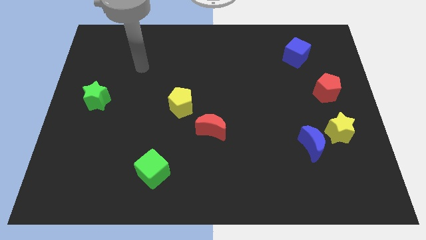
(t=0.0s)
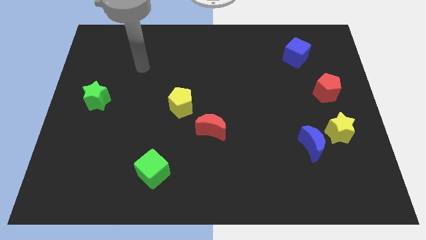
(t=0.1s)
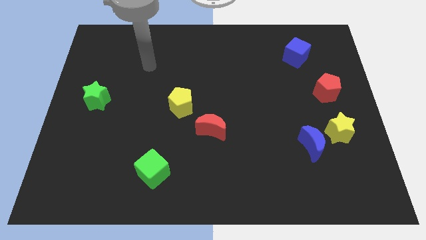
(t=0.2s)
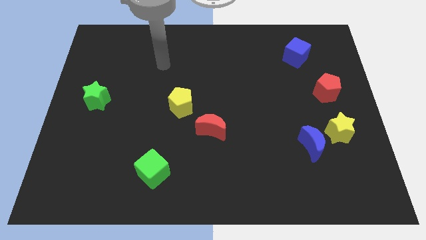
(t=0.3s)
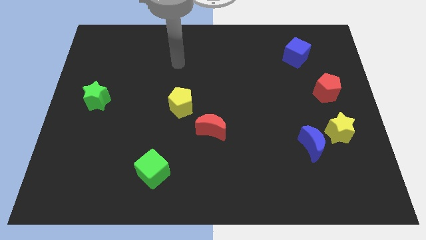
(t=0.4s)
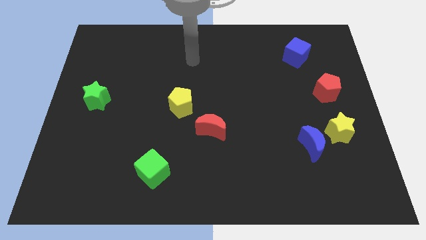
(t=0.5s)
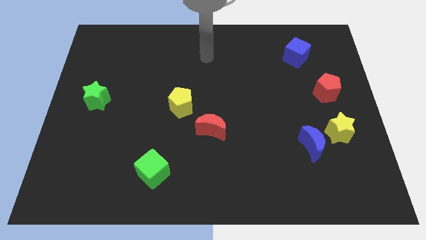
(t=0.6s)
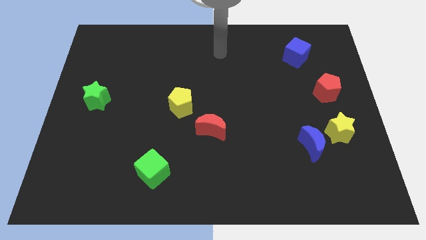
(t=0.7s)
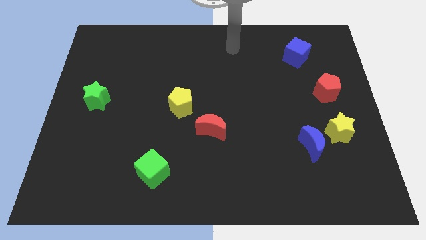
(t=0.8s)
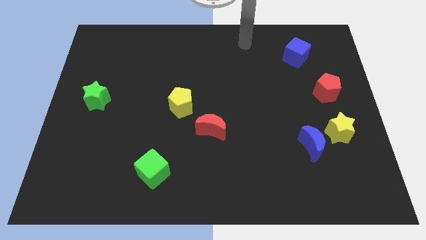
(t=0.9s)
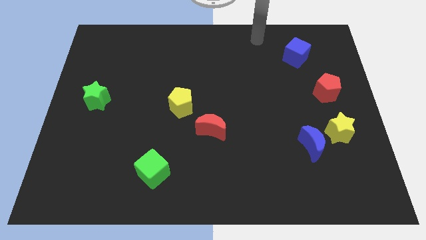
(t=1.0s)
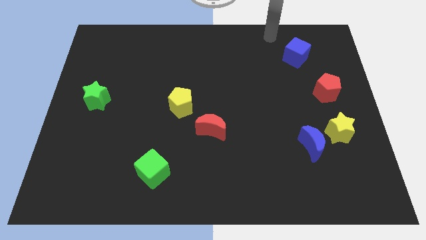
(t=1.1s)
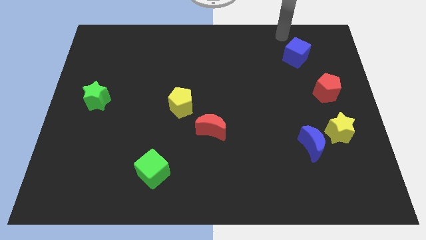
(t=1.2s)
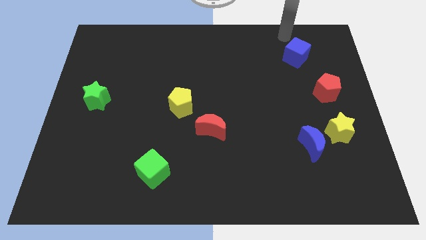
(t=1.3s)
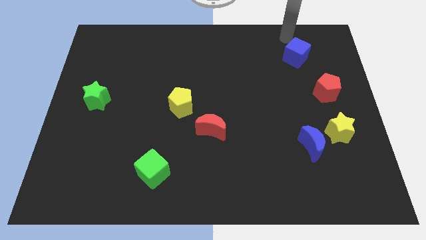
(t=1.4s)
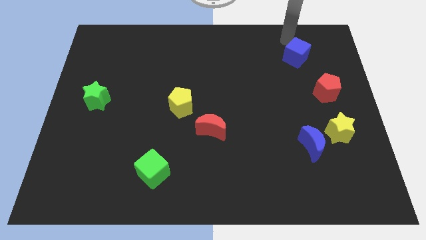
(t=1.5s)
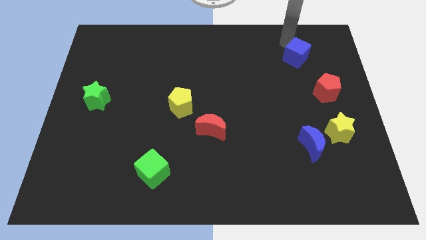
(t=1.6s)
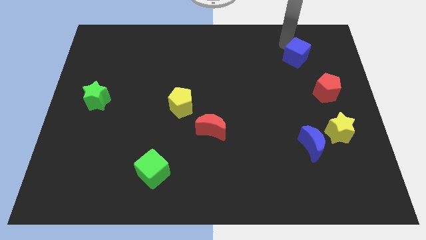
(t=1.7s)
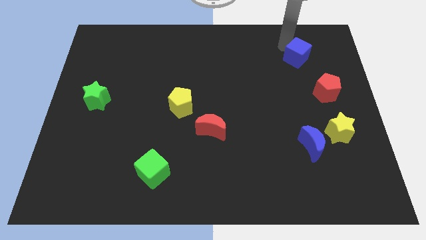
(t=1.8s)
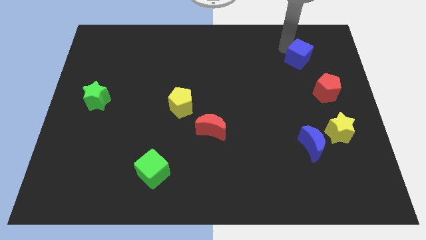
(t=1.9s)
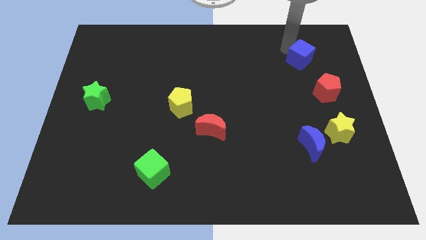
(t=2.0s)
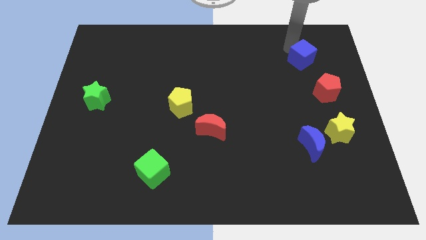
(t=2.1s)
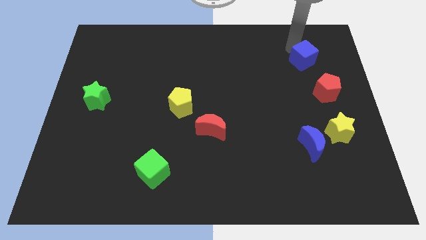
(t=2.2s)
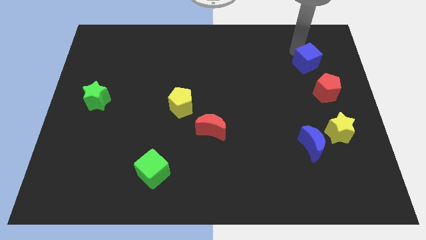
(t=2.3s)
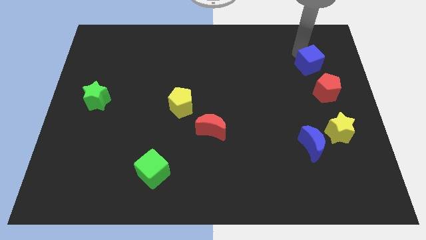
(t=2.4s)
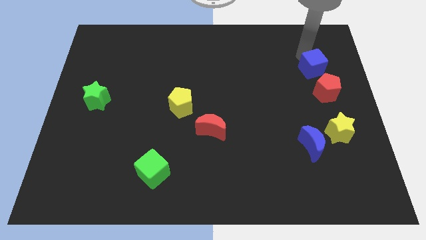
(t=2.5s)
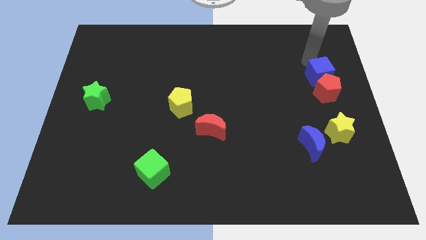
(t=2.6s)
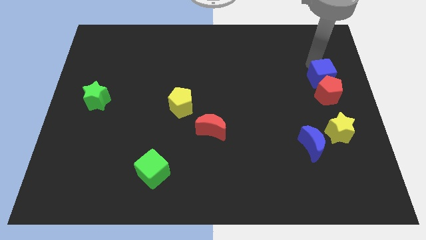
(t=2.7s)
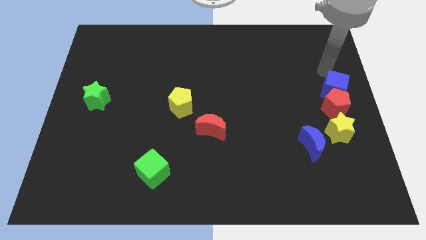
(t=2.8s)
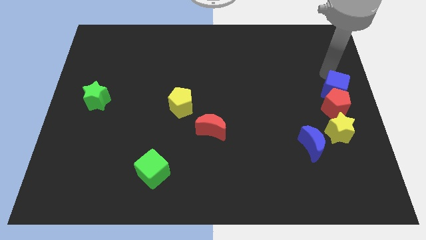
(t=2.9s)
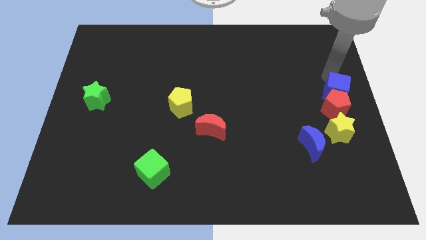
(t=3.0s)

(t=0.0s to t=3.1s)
push the blue cube into the red pentagon

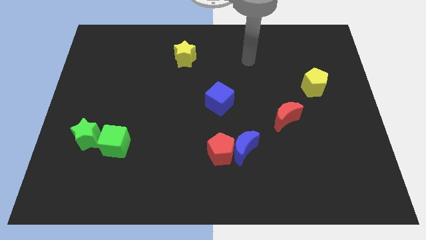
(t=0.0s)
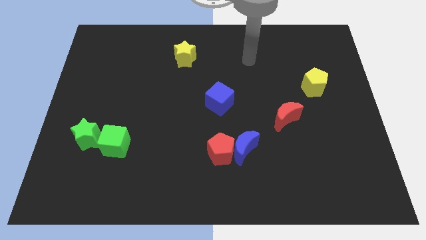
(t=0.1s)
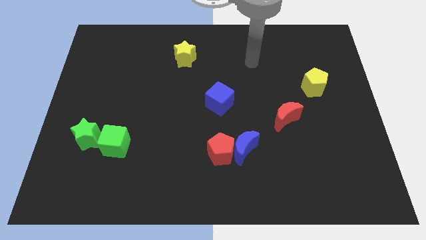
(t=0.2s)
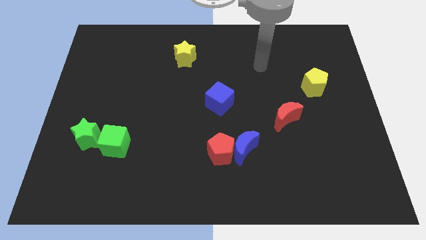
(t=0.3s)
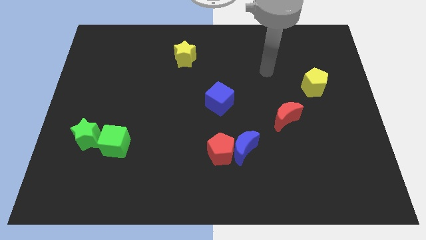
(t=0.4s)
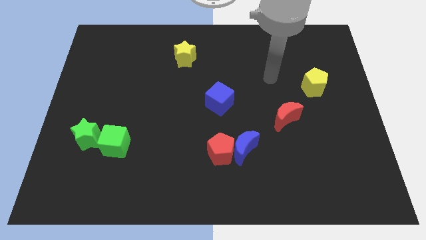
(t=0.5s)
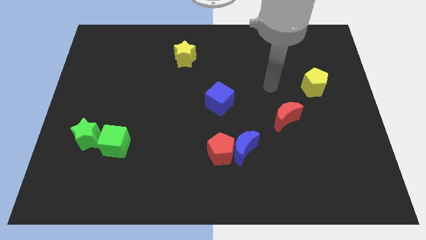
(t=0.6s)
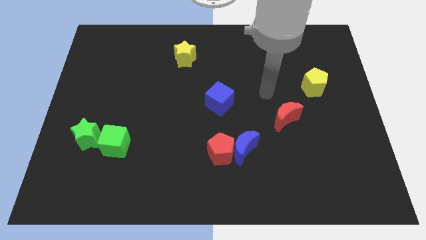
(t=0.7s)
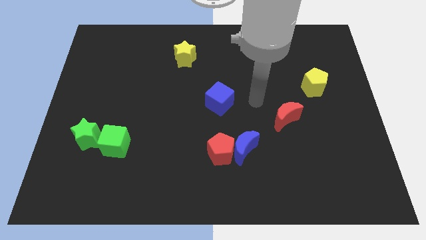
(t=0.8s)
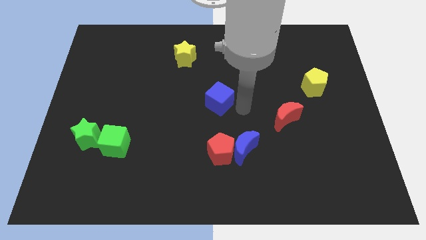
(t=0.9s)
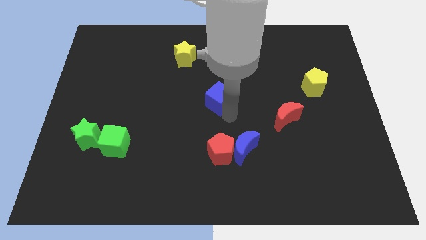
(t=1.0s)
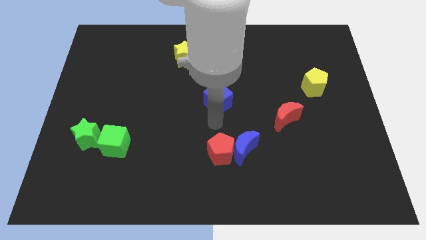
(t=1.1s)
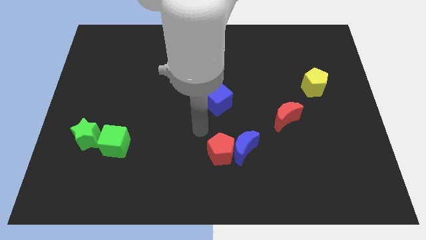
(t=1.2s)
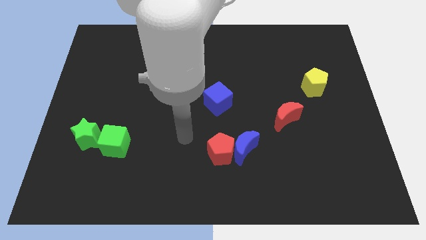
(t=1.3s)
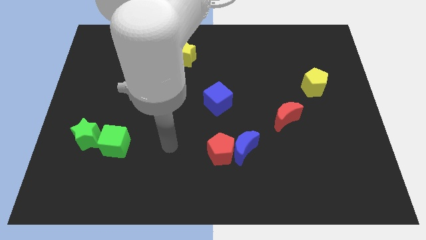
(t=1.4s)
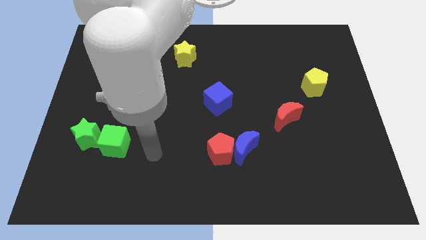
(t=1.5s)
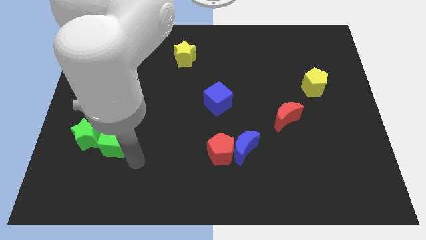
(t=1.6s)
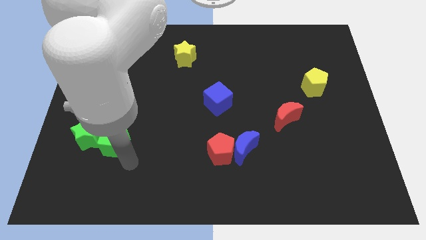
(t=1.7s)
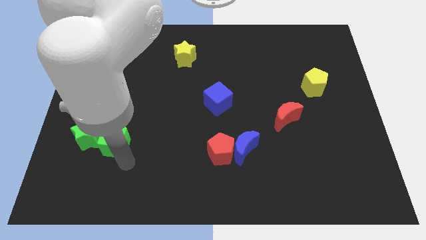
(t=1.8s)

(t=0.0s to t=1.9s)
move your arm to the bottom side of the green cube

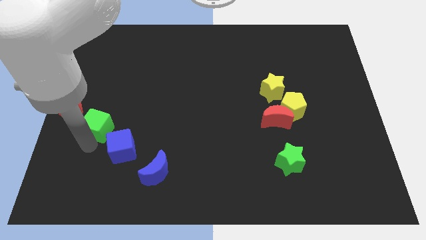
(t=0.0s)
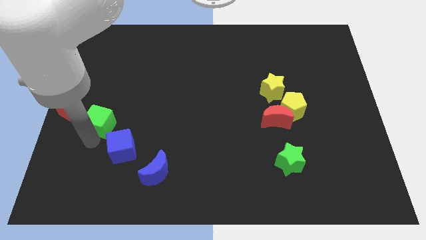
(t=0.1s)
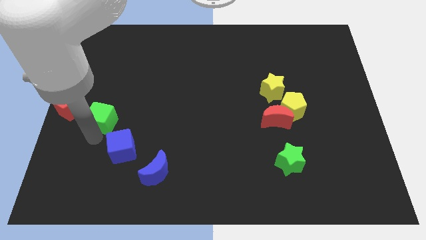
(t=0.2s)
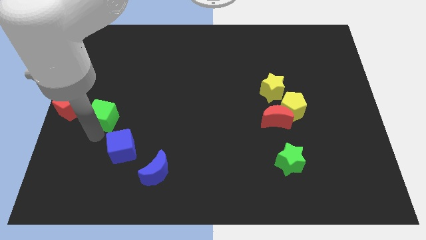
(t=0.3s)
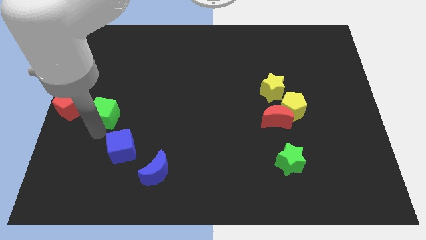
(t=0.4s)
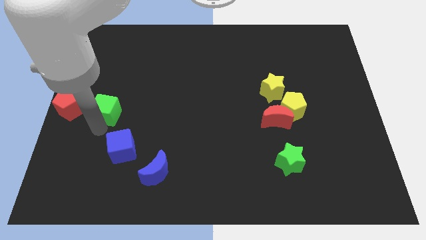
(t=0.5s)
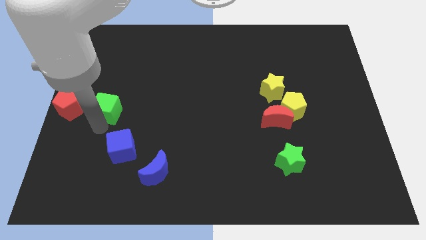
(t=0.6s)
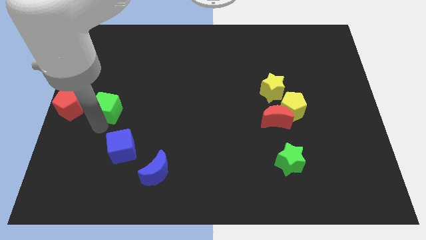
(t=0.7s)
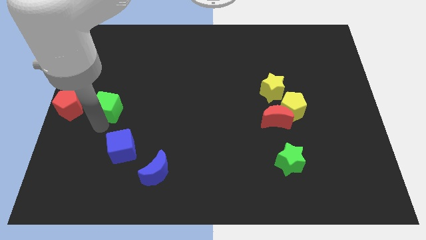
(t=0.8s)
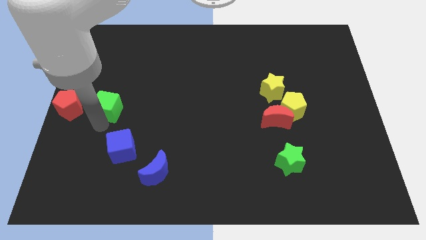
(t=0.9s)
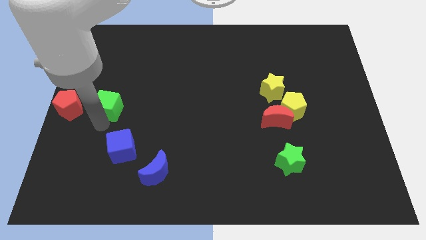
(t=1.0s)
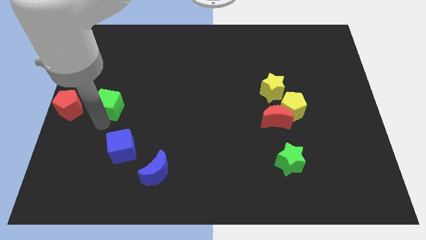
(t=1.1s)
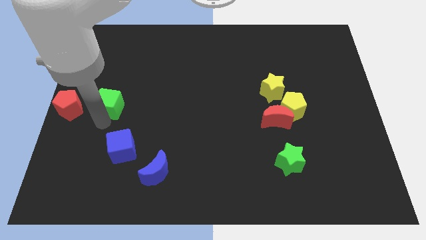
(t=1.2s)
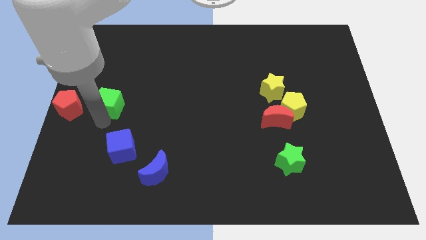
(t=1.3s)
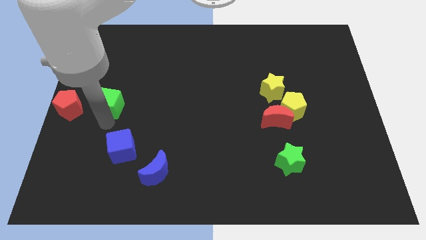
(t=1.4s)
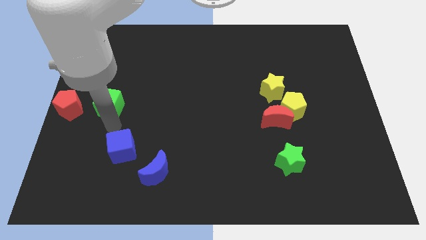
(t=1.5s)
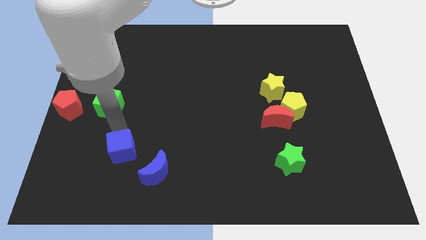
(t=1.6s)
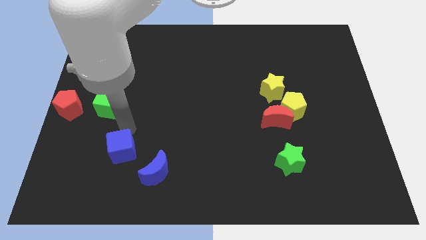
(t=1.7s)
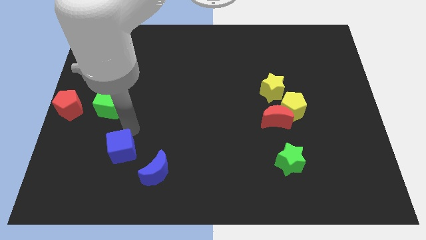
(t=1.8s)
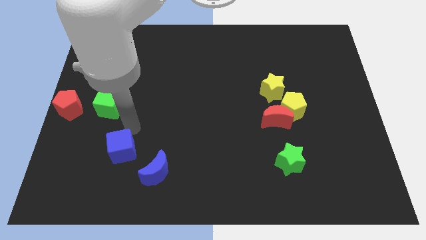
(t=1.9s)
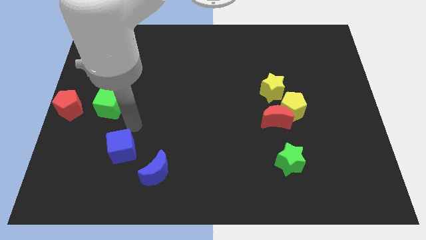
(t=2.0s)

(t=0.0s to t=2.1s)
separate green cube from blue cube

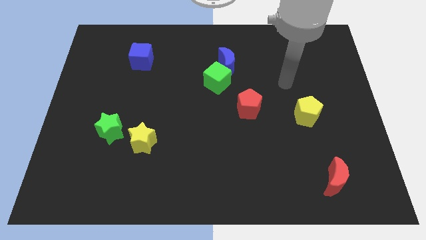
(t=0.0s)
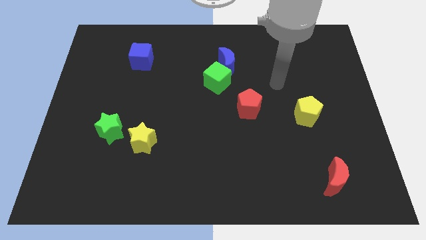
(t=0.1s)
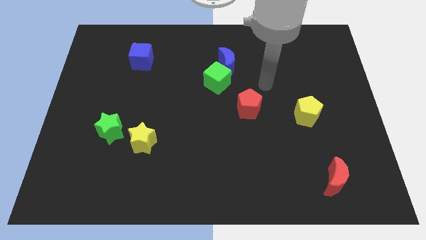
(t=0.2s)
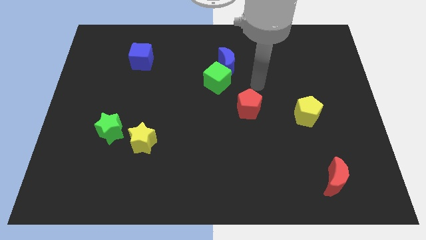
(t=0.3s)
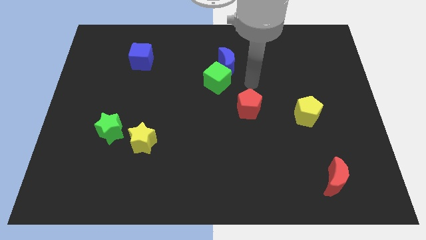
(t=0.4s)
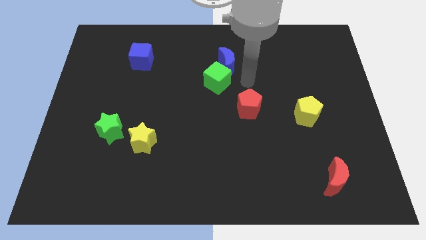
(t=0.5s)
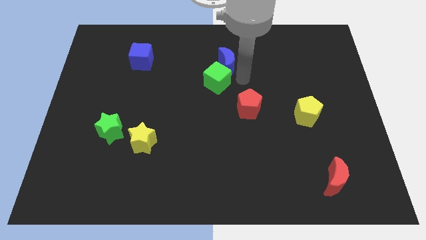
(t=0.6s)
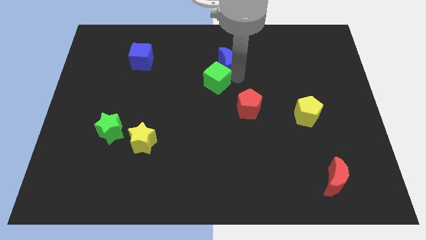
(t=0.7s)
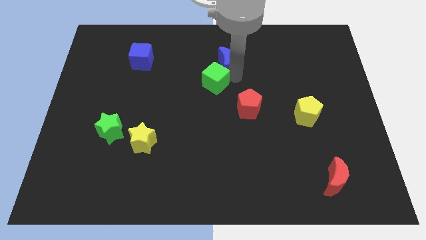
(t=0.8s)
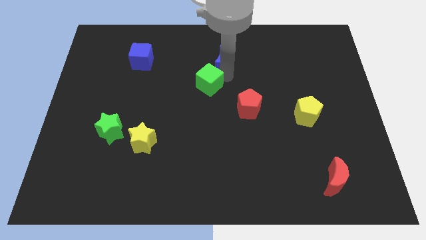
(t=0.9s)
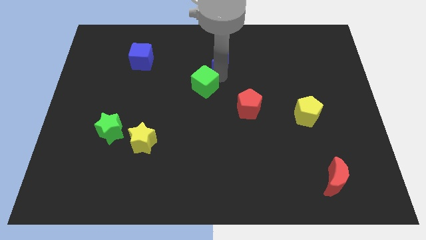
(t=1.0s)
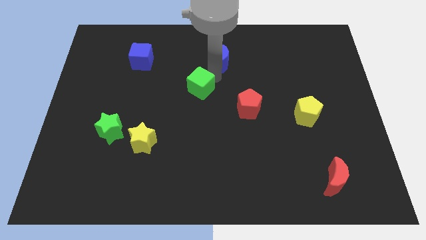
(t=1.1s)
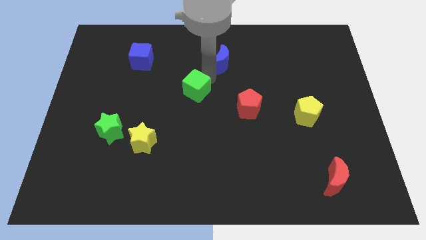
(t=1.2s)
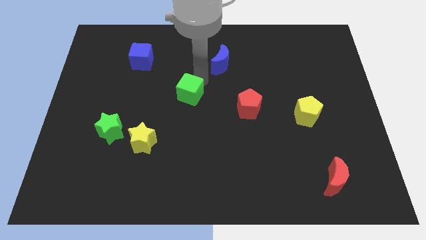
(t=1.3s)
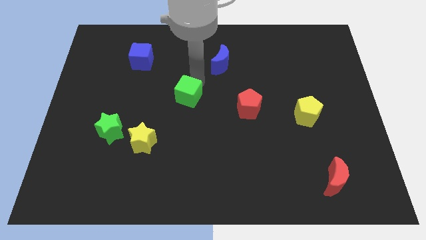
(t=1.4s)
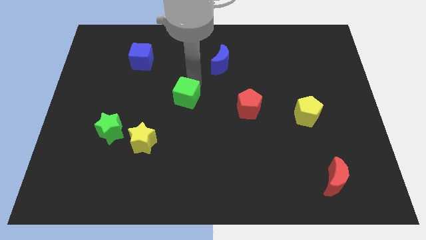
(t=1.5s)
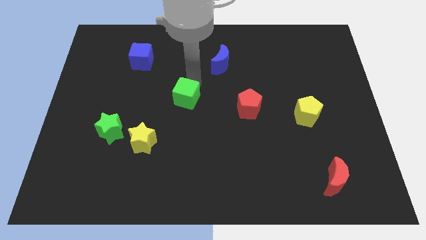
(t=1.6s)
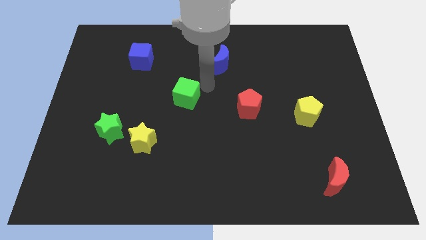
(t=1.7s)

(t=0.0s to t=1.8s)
move green cube slightly down
